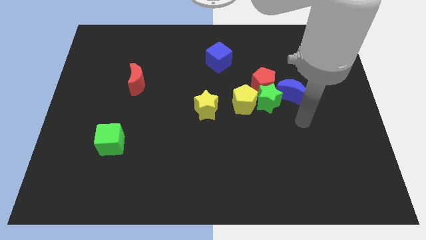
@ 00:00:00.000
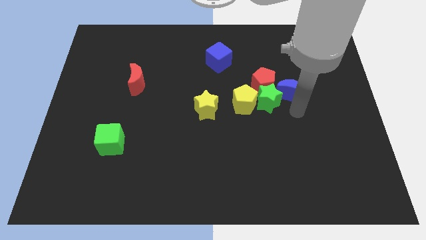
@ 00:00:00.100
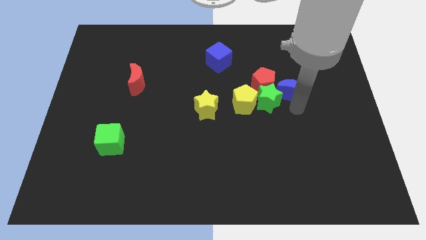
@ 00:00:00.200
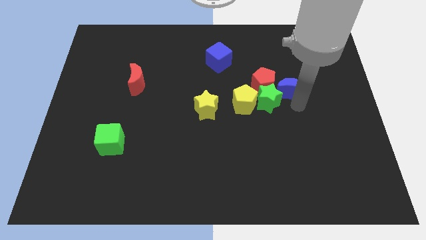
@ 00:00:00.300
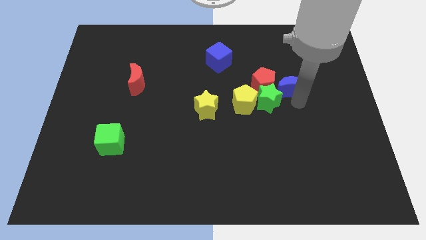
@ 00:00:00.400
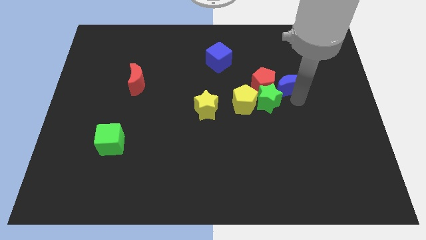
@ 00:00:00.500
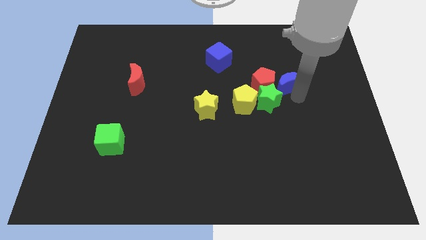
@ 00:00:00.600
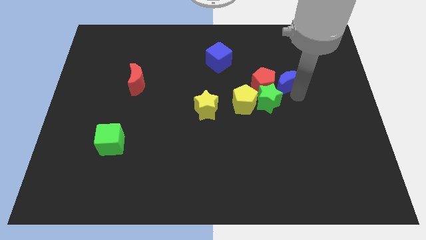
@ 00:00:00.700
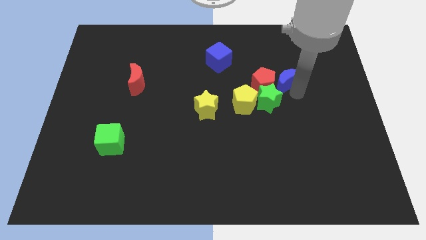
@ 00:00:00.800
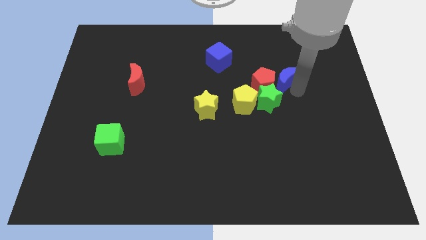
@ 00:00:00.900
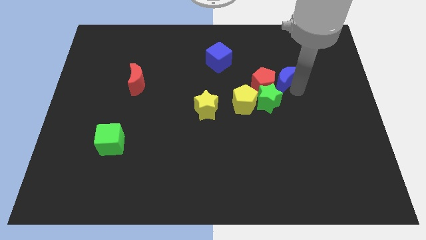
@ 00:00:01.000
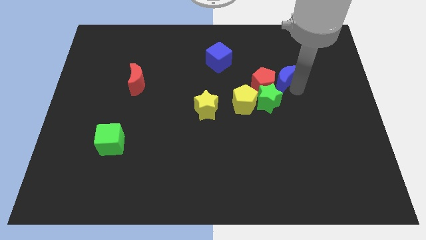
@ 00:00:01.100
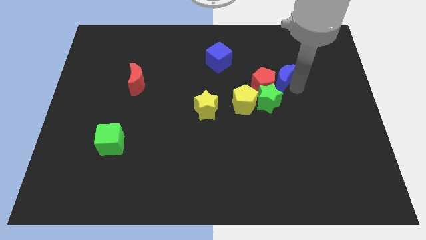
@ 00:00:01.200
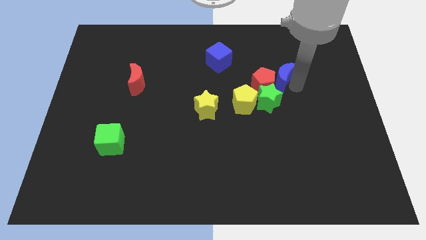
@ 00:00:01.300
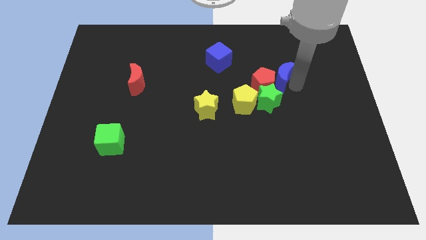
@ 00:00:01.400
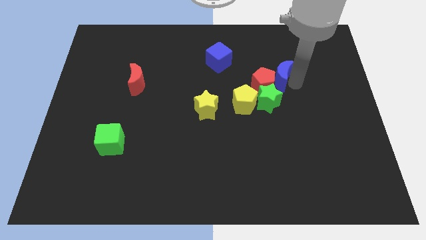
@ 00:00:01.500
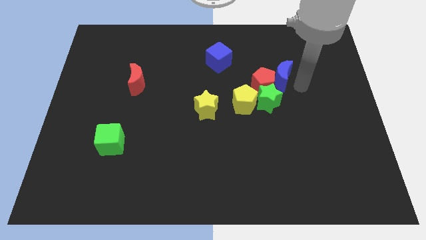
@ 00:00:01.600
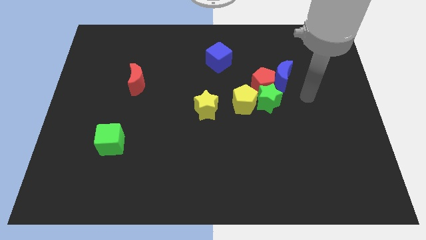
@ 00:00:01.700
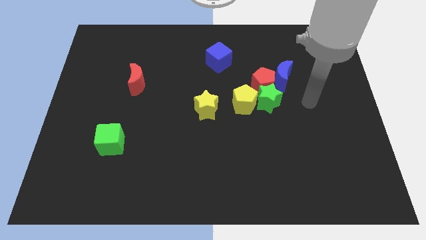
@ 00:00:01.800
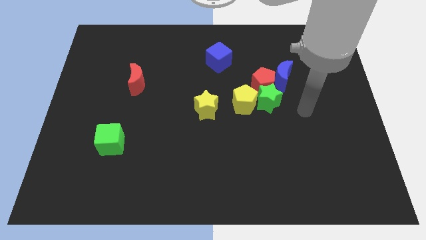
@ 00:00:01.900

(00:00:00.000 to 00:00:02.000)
move the blue moon right beside the red pentagon

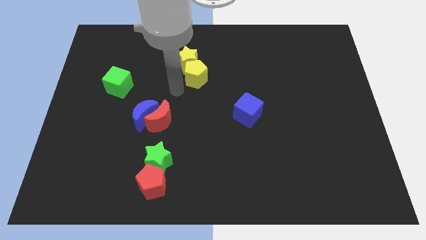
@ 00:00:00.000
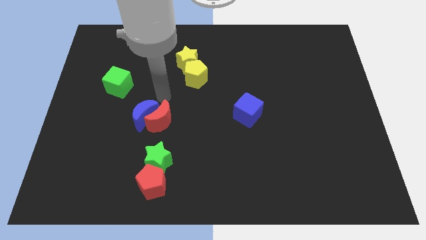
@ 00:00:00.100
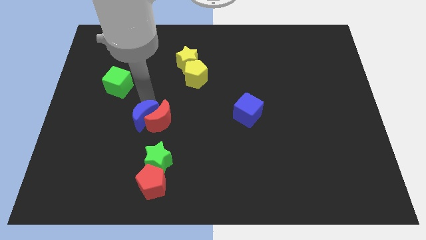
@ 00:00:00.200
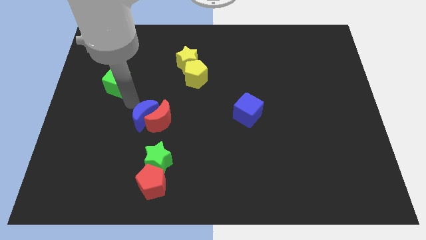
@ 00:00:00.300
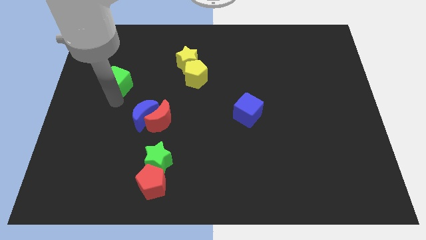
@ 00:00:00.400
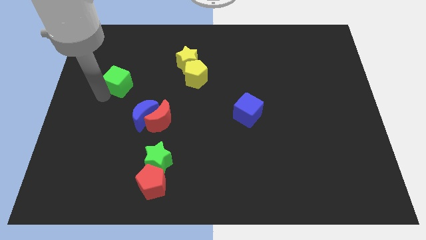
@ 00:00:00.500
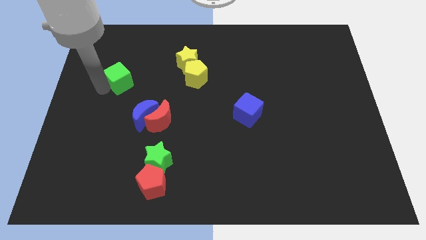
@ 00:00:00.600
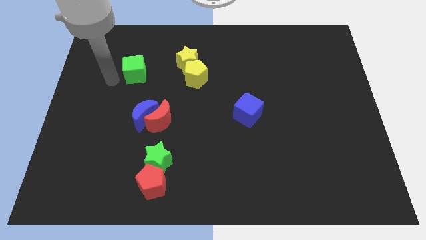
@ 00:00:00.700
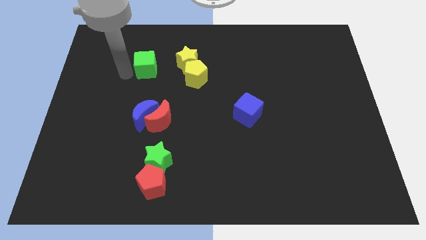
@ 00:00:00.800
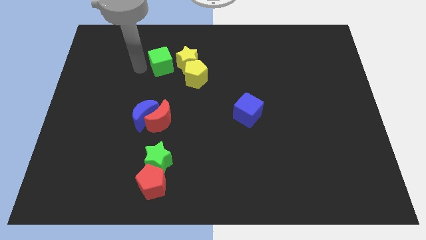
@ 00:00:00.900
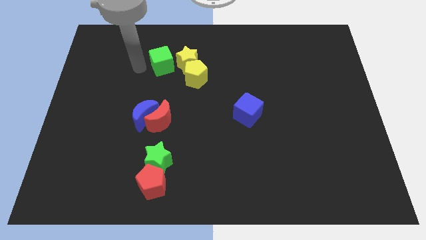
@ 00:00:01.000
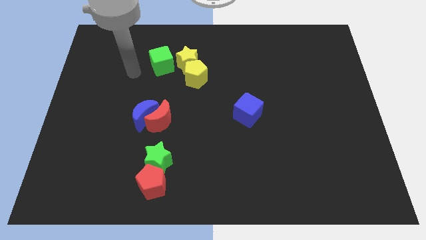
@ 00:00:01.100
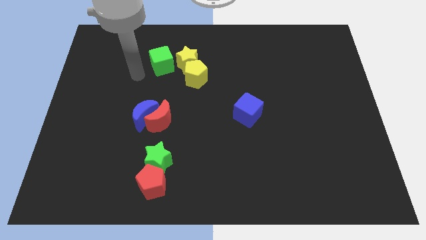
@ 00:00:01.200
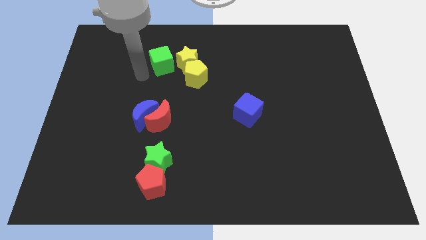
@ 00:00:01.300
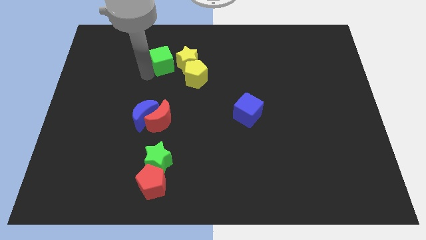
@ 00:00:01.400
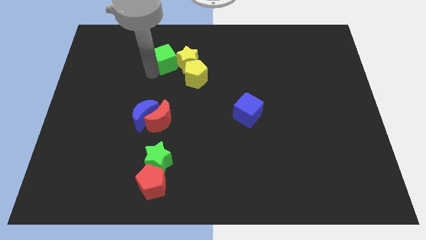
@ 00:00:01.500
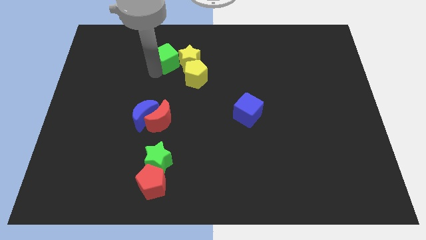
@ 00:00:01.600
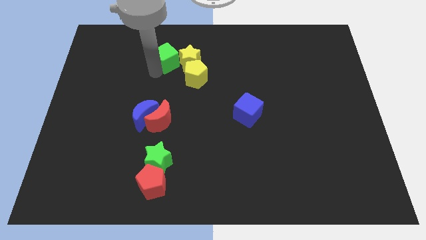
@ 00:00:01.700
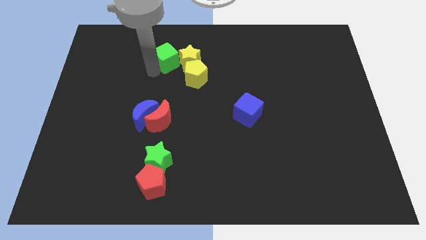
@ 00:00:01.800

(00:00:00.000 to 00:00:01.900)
push the green cube into the yellow star

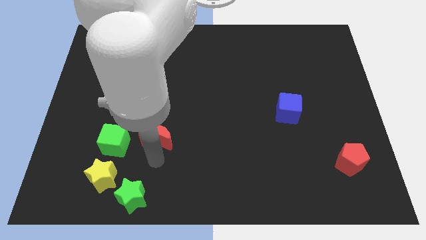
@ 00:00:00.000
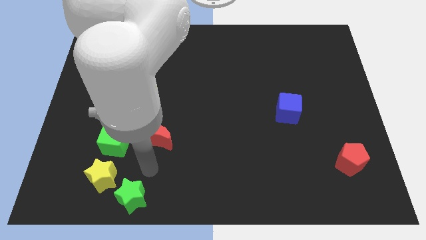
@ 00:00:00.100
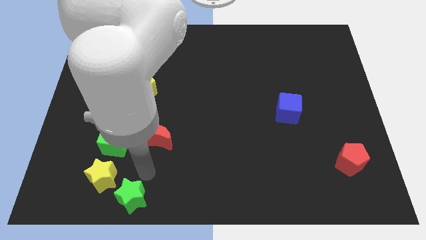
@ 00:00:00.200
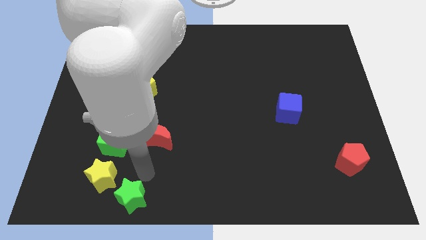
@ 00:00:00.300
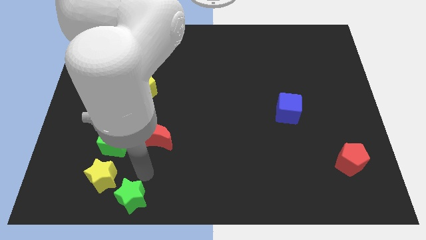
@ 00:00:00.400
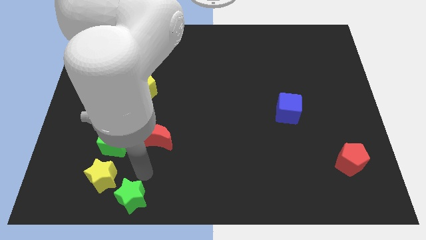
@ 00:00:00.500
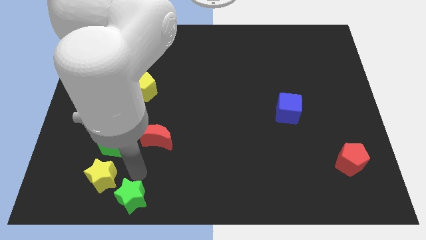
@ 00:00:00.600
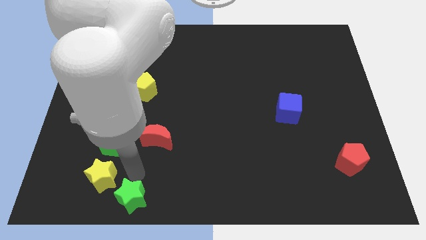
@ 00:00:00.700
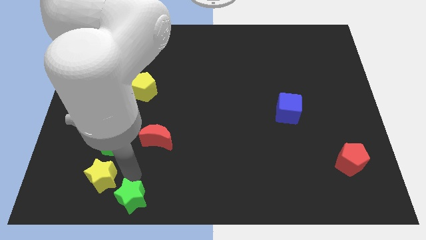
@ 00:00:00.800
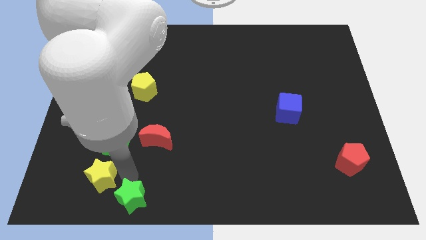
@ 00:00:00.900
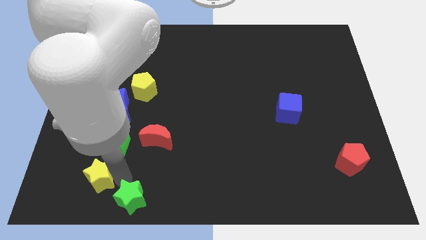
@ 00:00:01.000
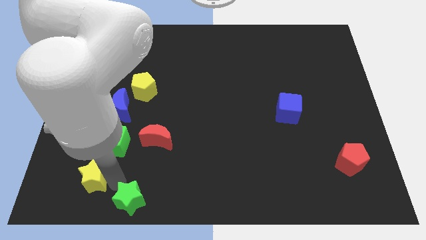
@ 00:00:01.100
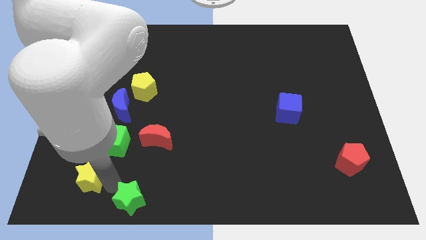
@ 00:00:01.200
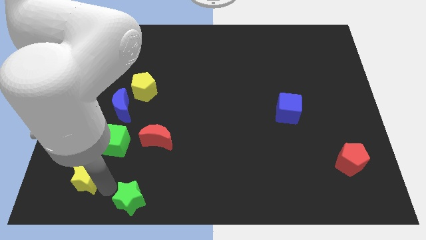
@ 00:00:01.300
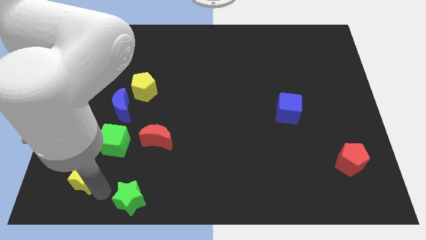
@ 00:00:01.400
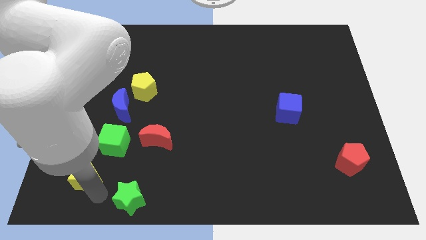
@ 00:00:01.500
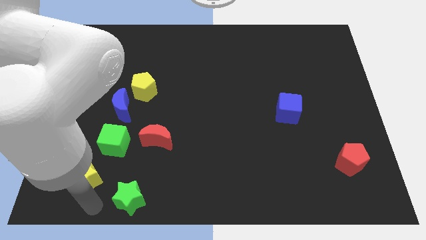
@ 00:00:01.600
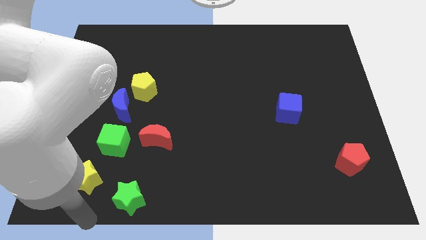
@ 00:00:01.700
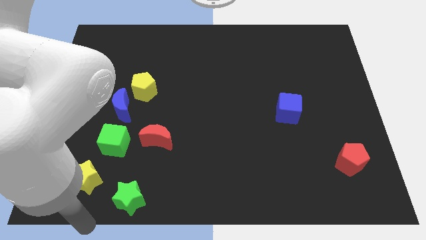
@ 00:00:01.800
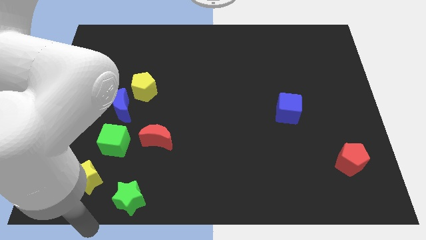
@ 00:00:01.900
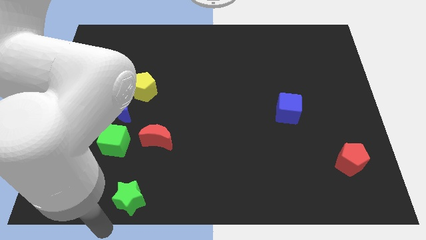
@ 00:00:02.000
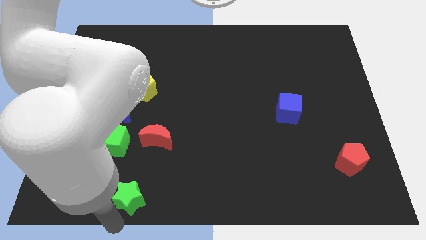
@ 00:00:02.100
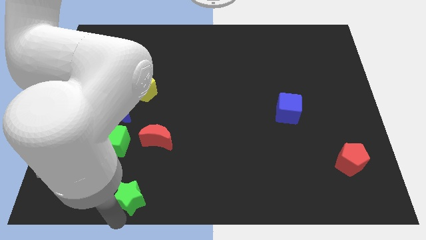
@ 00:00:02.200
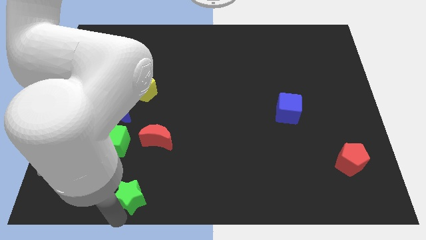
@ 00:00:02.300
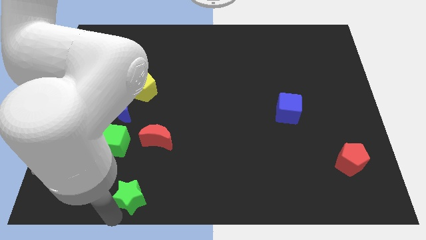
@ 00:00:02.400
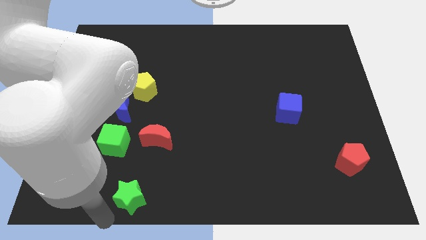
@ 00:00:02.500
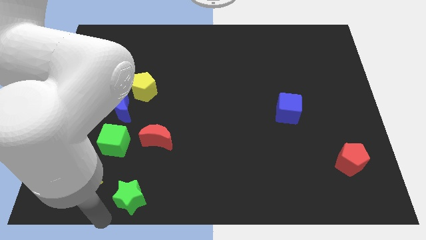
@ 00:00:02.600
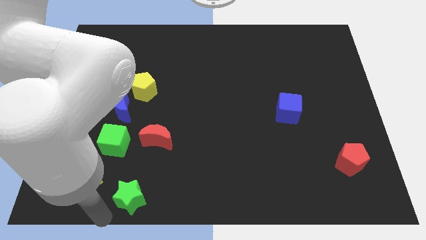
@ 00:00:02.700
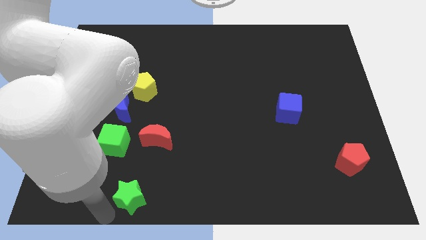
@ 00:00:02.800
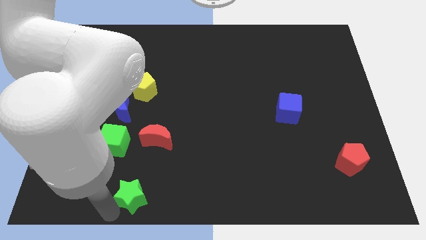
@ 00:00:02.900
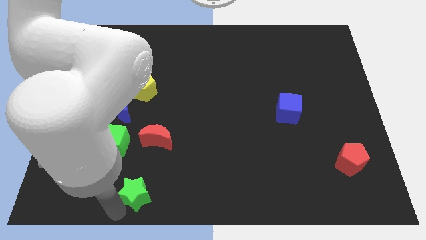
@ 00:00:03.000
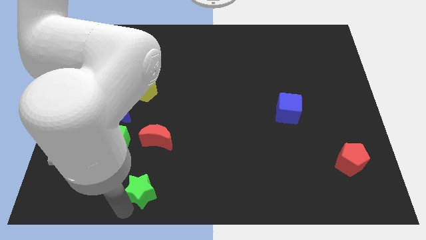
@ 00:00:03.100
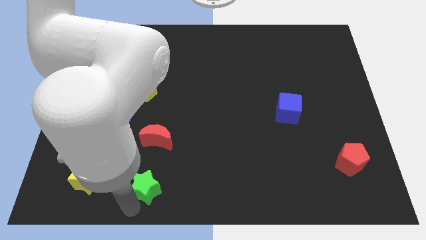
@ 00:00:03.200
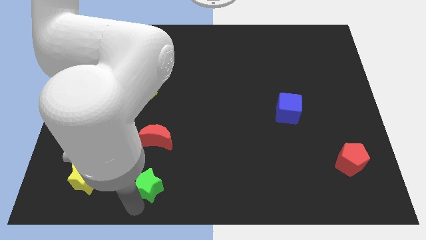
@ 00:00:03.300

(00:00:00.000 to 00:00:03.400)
push the green star towards the bottom center

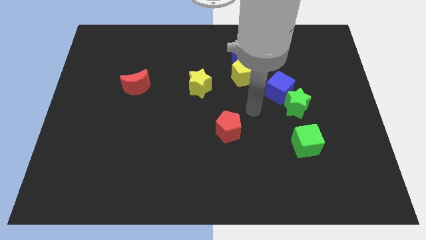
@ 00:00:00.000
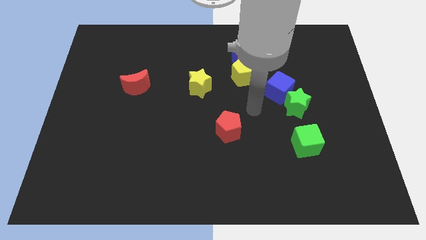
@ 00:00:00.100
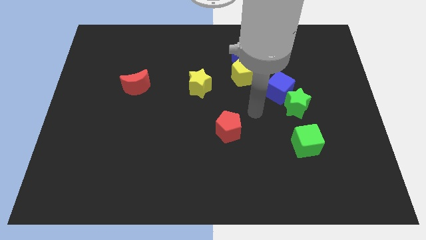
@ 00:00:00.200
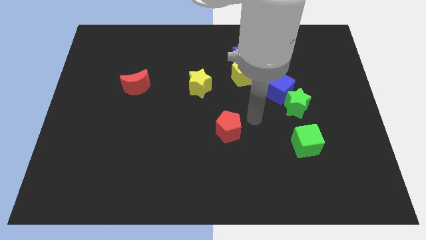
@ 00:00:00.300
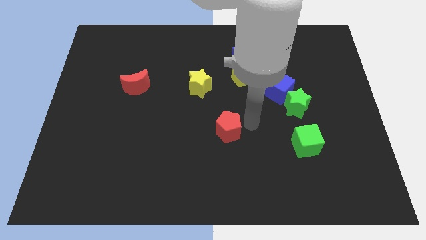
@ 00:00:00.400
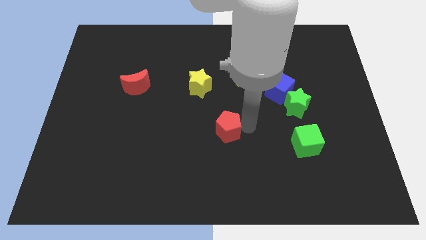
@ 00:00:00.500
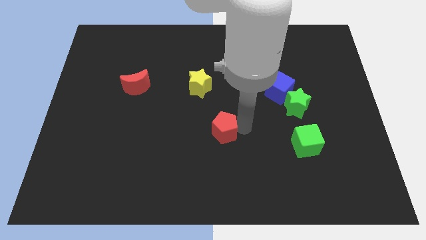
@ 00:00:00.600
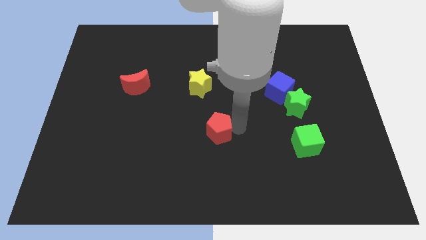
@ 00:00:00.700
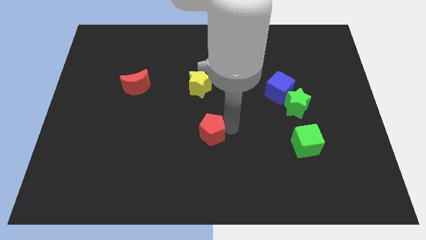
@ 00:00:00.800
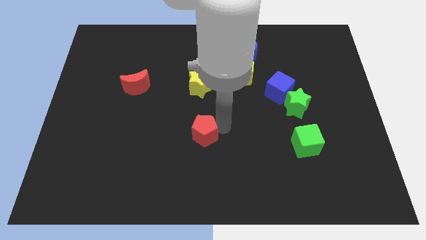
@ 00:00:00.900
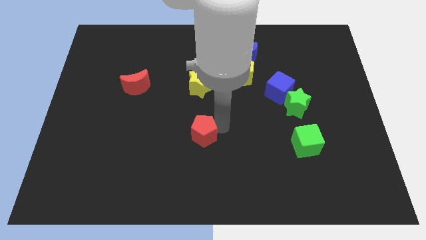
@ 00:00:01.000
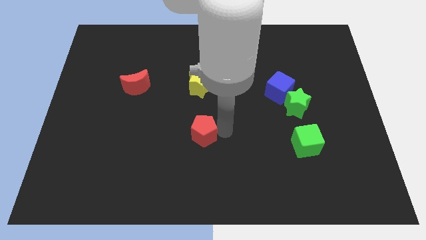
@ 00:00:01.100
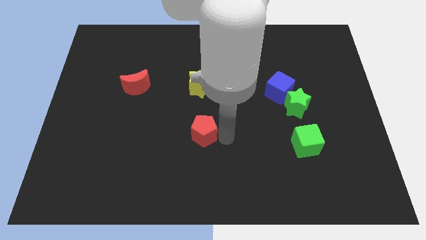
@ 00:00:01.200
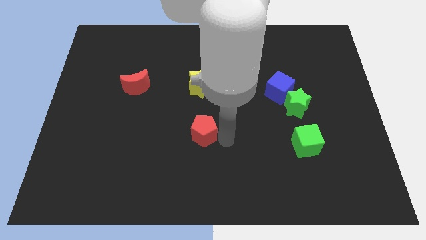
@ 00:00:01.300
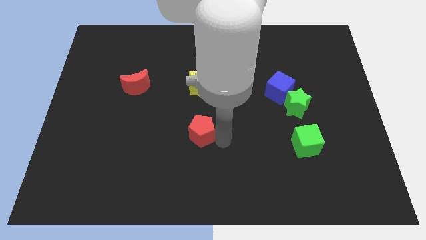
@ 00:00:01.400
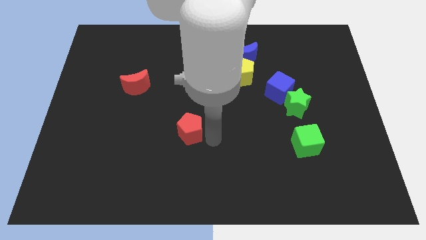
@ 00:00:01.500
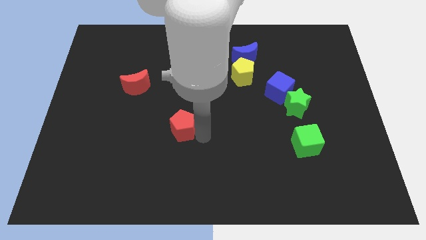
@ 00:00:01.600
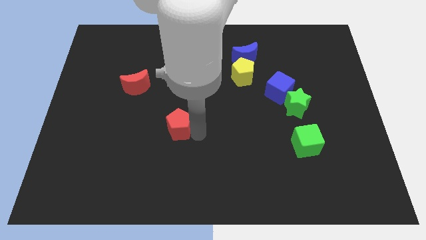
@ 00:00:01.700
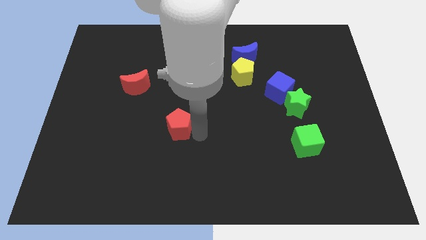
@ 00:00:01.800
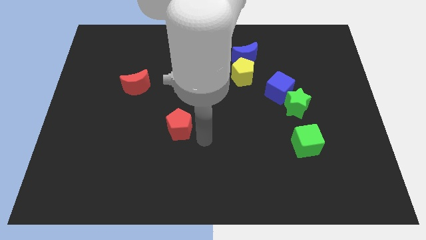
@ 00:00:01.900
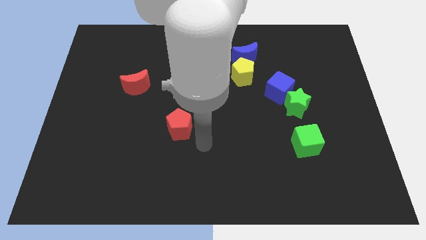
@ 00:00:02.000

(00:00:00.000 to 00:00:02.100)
move red pentagon to the left
